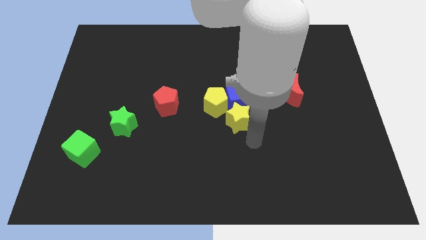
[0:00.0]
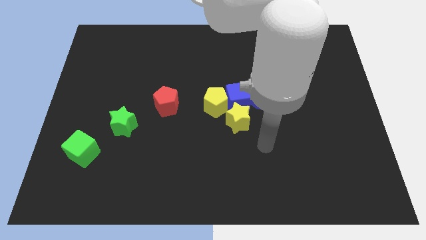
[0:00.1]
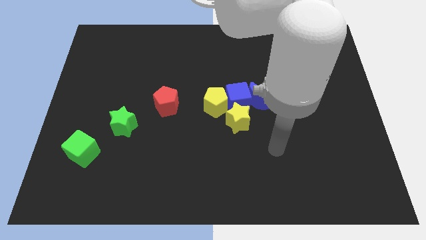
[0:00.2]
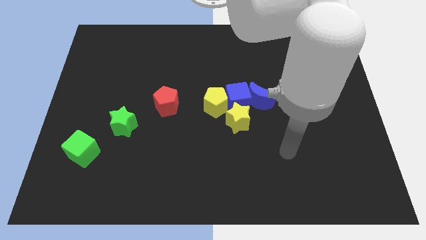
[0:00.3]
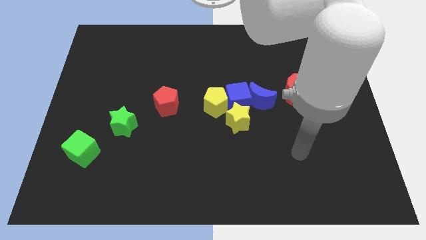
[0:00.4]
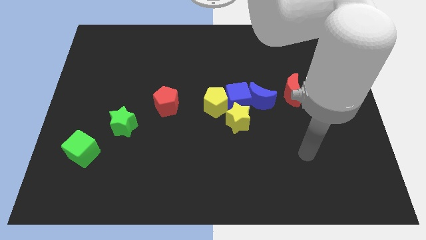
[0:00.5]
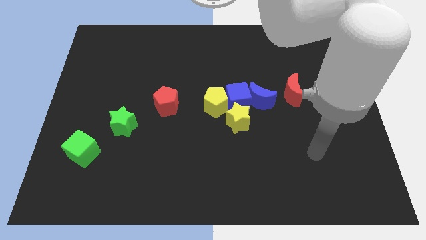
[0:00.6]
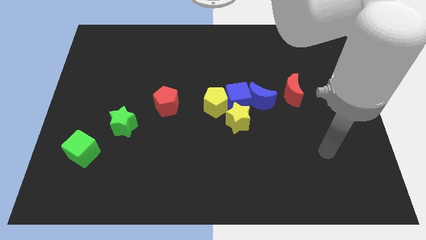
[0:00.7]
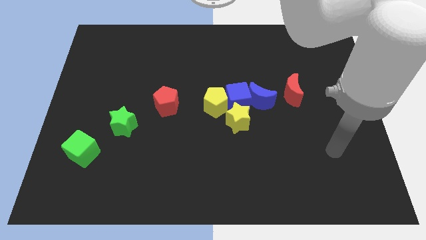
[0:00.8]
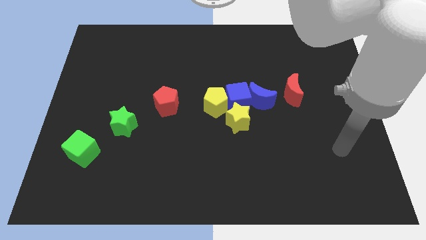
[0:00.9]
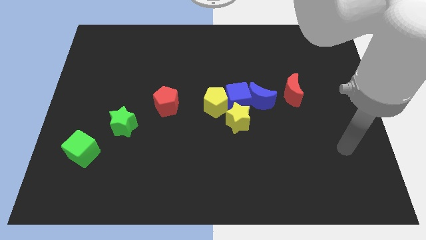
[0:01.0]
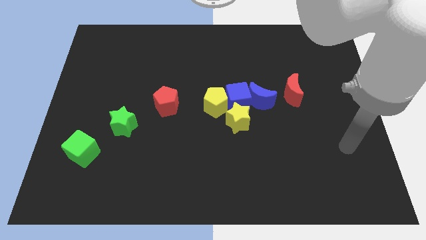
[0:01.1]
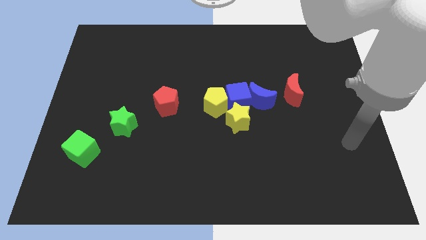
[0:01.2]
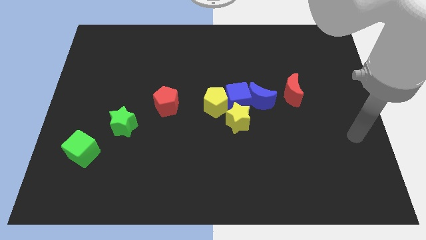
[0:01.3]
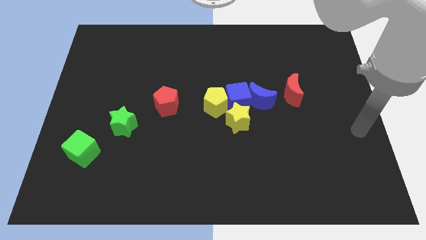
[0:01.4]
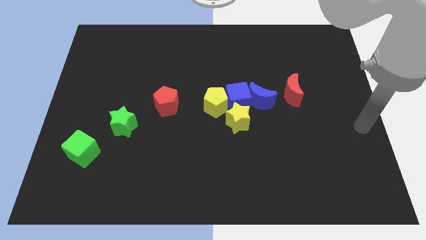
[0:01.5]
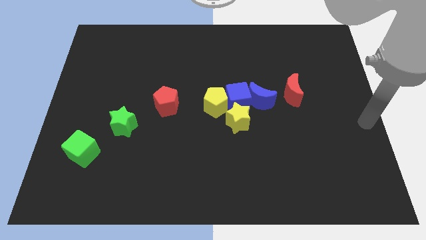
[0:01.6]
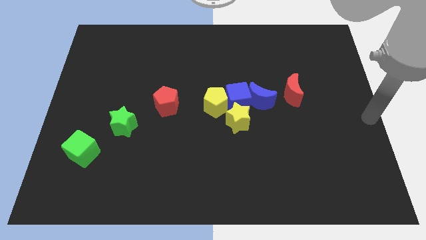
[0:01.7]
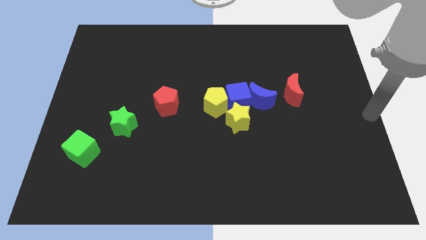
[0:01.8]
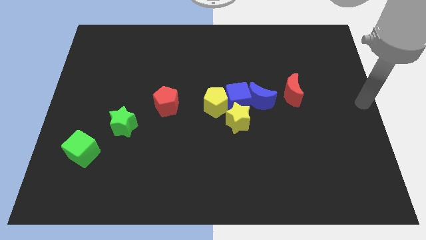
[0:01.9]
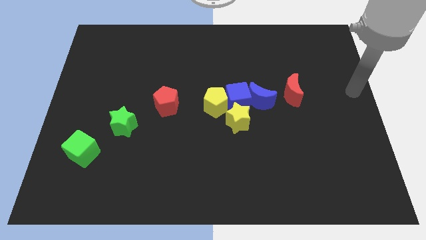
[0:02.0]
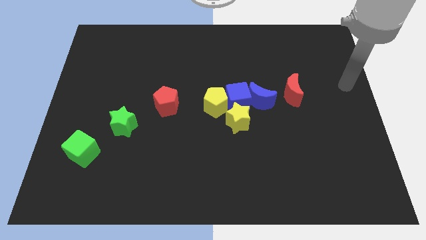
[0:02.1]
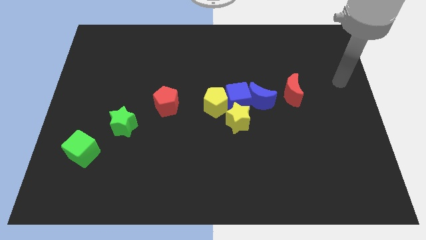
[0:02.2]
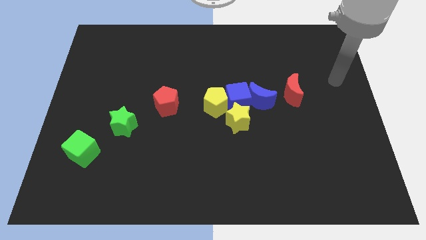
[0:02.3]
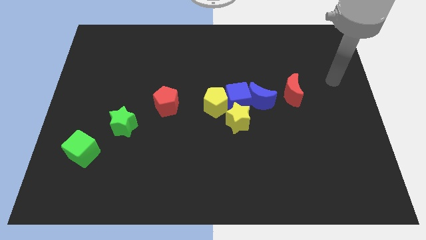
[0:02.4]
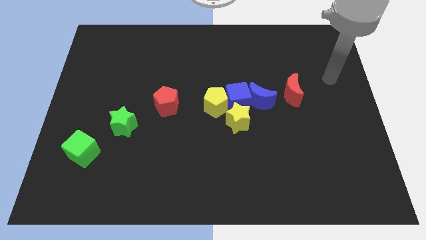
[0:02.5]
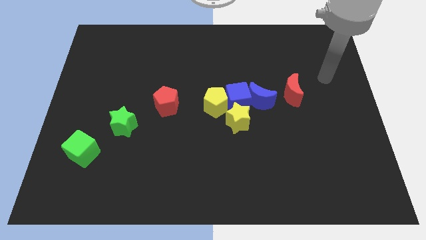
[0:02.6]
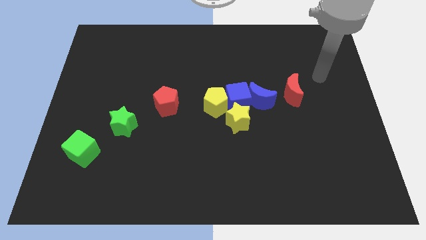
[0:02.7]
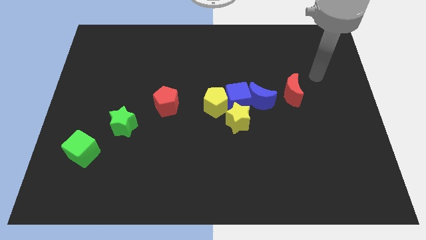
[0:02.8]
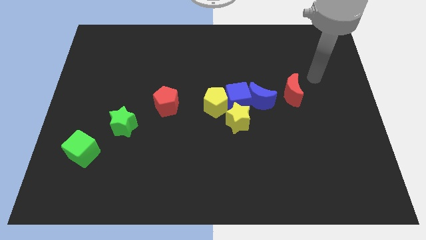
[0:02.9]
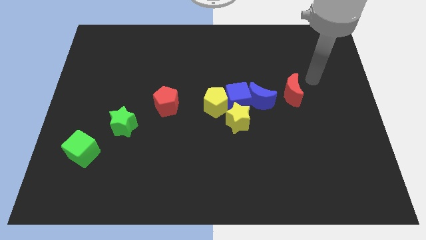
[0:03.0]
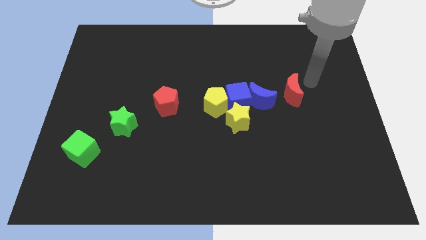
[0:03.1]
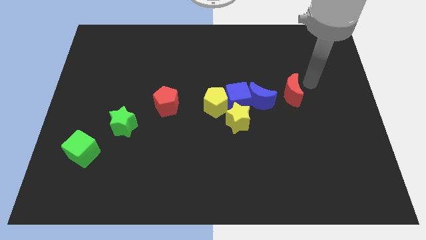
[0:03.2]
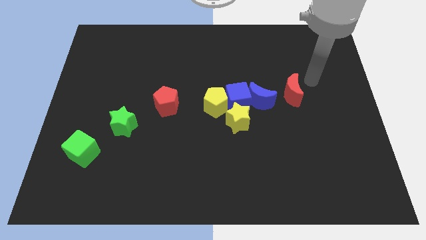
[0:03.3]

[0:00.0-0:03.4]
move the arm at the right side of the red moon

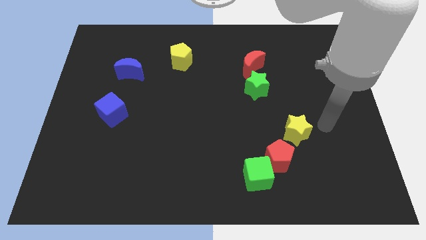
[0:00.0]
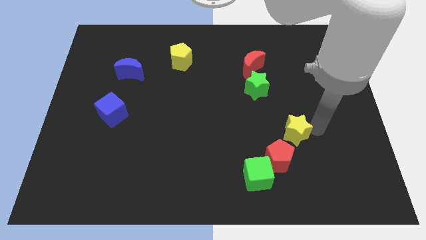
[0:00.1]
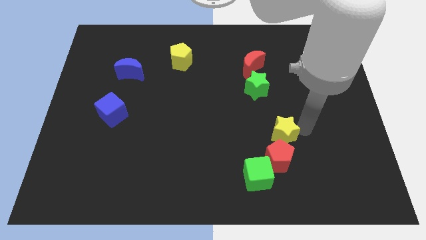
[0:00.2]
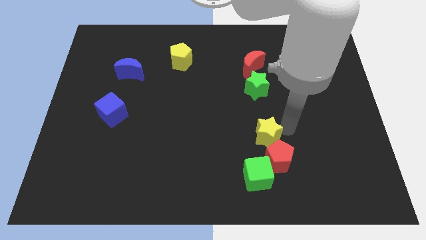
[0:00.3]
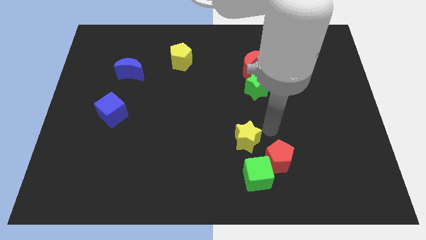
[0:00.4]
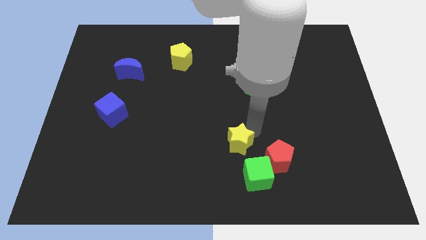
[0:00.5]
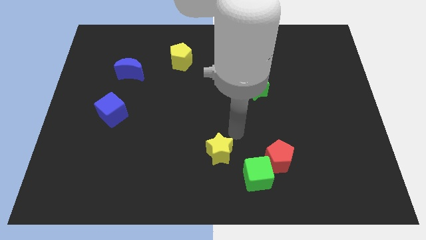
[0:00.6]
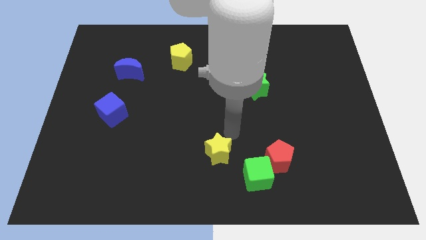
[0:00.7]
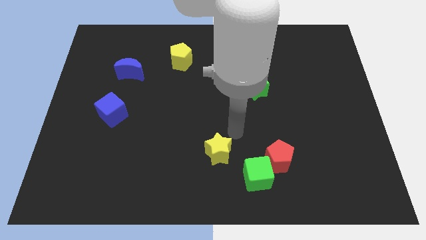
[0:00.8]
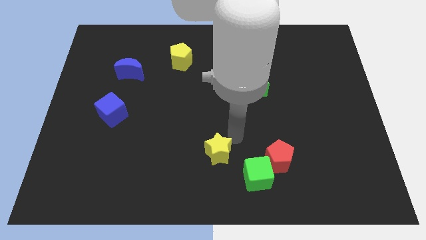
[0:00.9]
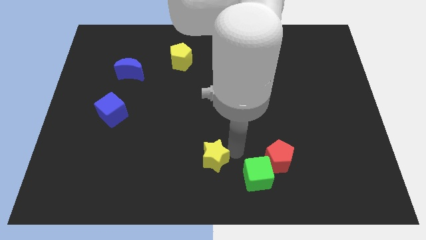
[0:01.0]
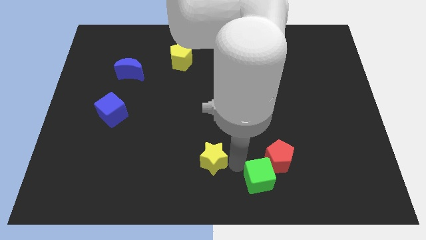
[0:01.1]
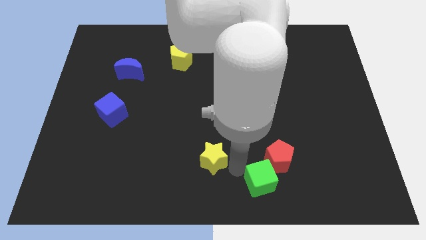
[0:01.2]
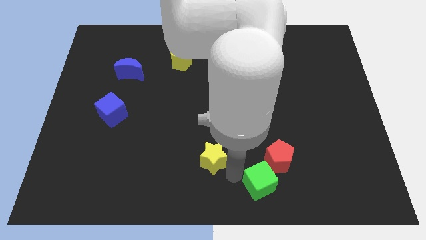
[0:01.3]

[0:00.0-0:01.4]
separate the yellow star from the red pentagon

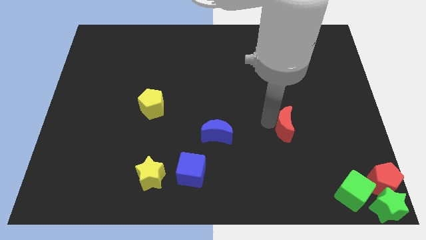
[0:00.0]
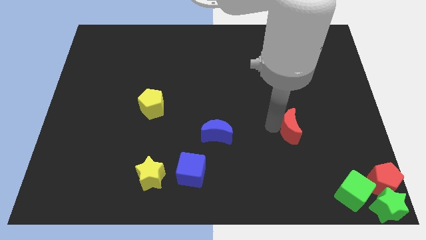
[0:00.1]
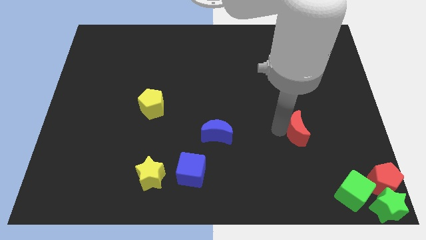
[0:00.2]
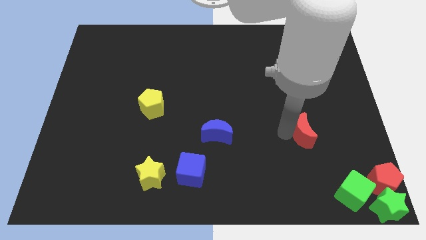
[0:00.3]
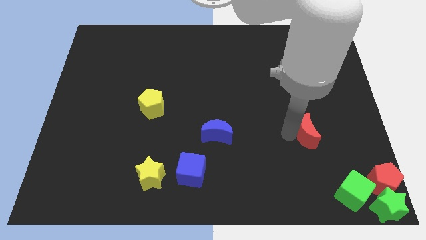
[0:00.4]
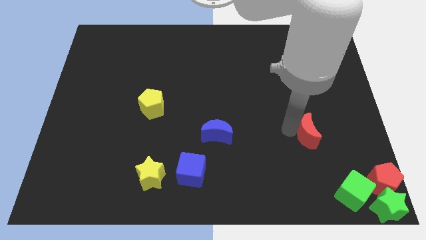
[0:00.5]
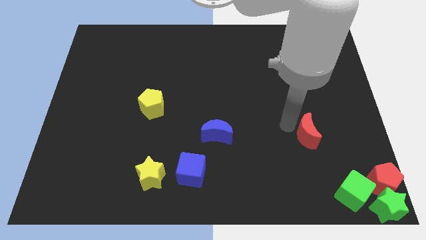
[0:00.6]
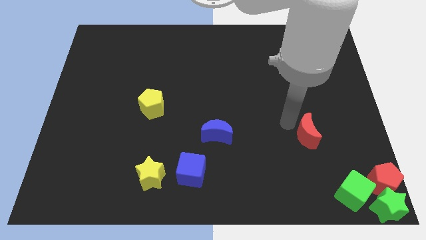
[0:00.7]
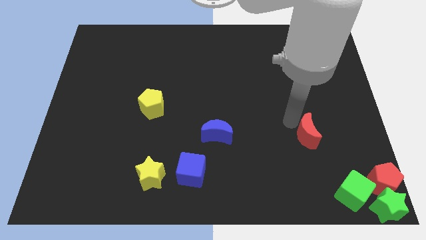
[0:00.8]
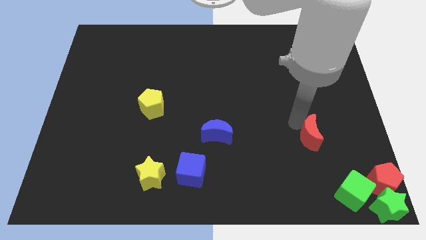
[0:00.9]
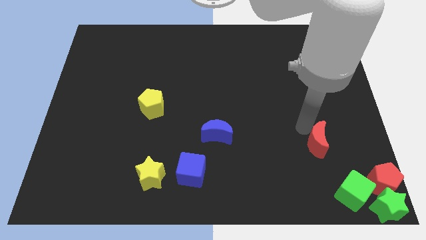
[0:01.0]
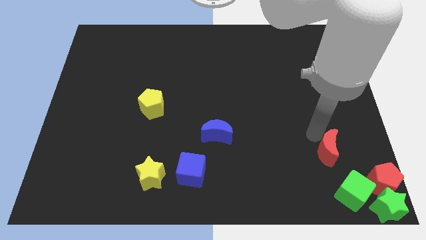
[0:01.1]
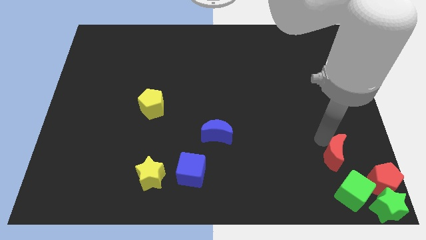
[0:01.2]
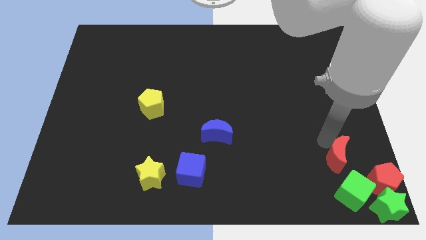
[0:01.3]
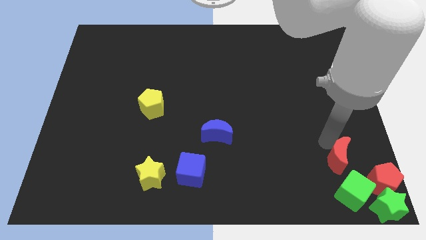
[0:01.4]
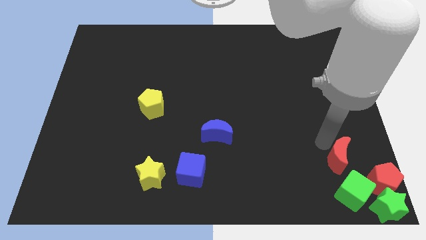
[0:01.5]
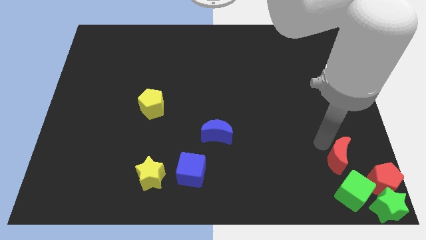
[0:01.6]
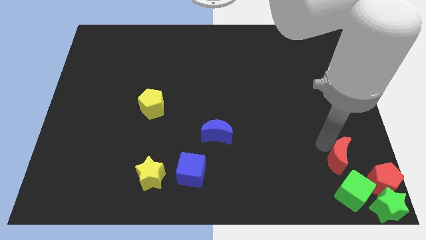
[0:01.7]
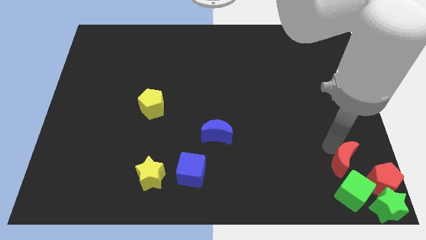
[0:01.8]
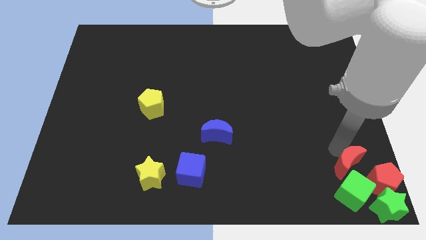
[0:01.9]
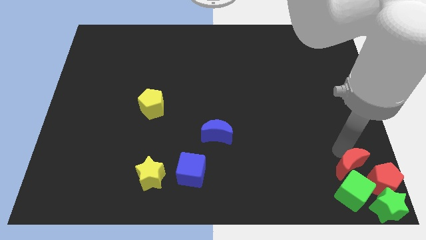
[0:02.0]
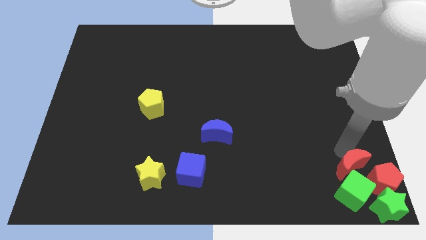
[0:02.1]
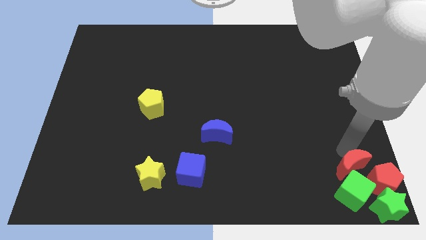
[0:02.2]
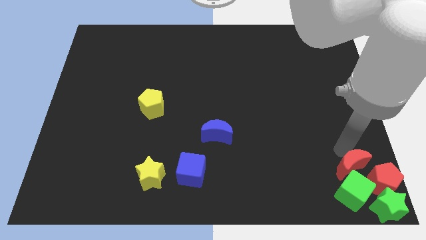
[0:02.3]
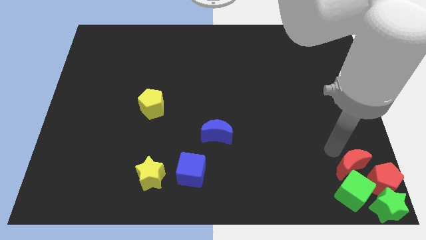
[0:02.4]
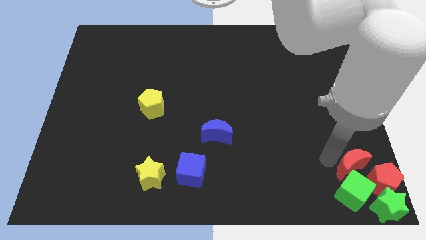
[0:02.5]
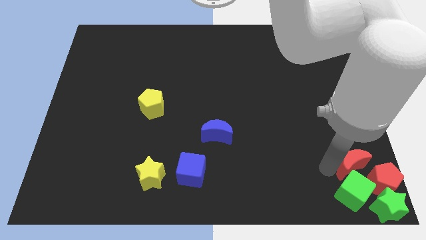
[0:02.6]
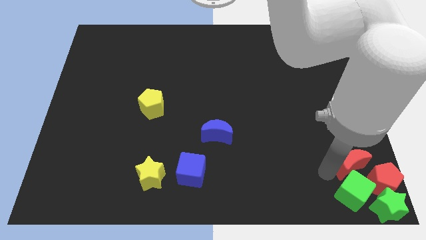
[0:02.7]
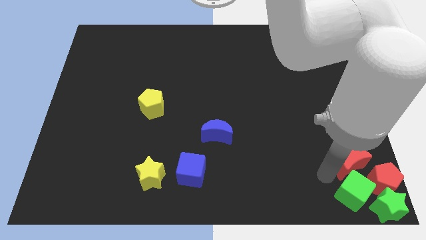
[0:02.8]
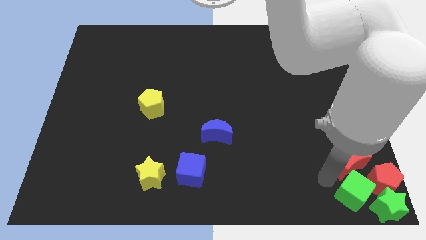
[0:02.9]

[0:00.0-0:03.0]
push red crescent over green cube

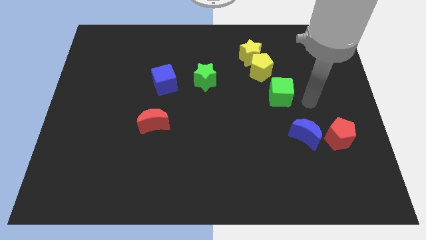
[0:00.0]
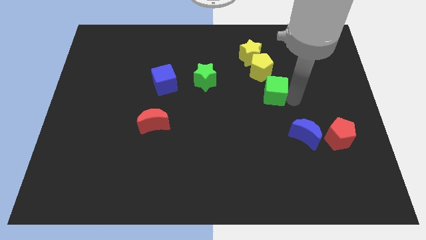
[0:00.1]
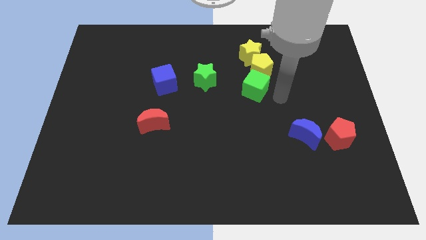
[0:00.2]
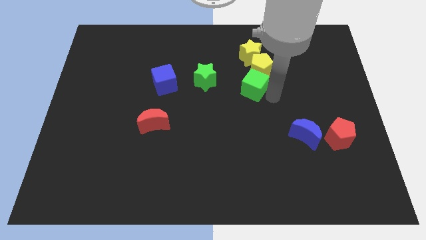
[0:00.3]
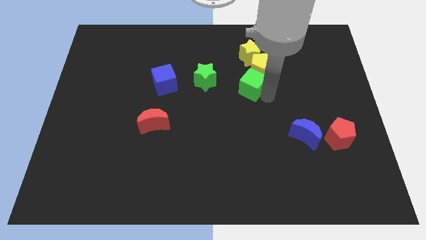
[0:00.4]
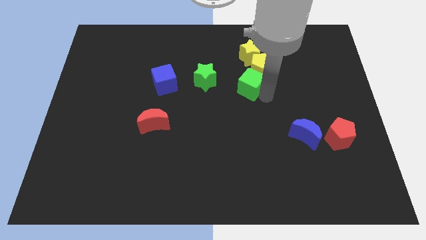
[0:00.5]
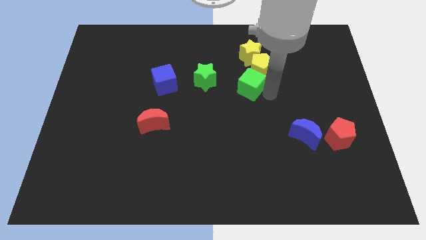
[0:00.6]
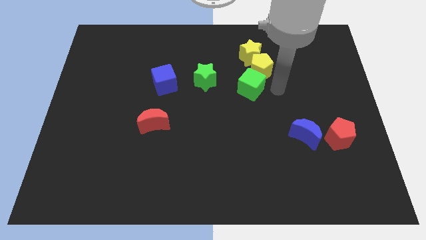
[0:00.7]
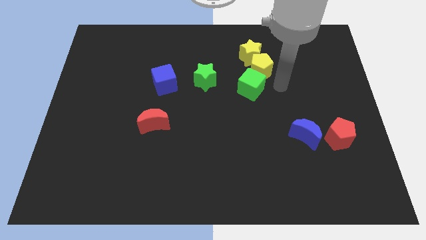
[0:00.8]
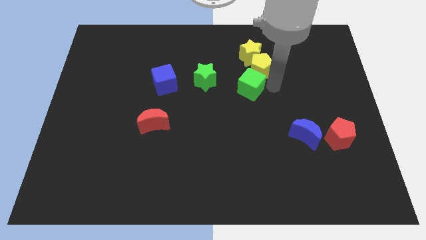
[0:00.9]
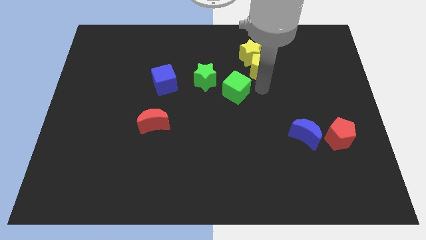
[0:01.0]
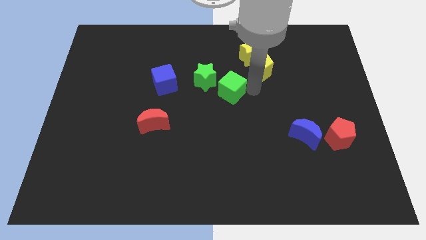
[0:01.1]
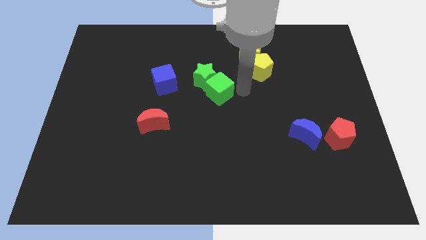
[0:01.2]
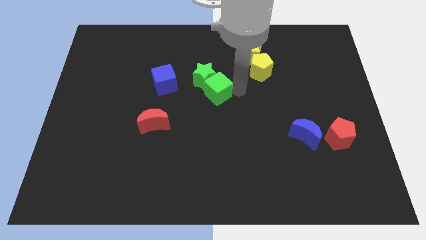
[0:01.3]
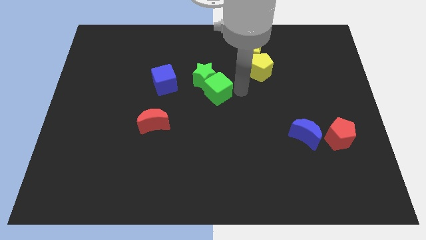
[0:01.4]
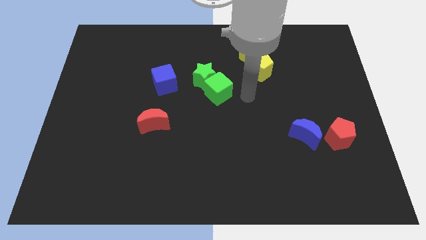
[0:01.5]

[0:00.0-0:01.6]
move the green cube to the right bottom side of the green star
